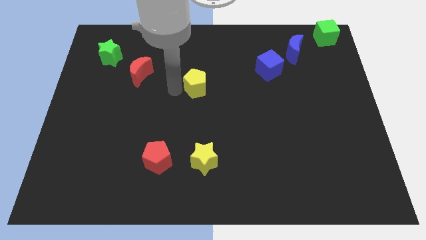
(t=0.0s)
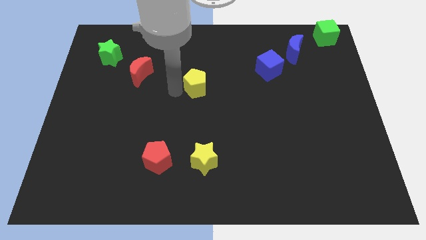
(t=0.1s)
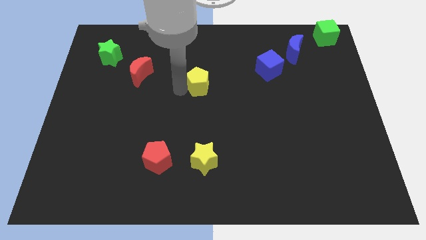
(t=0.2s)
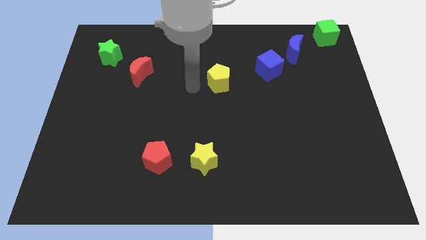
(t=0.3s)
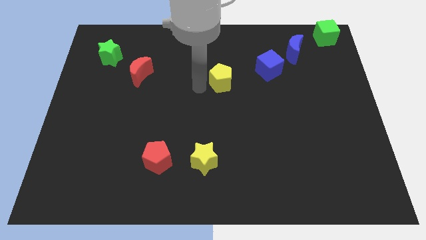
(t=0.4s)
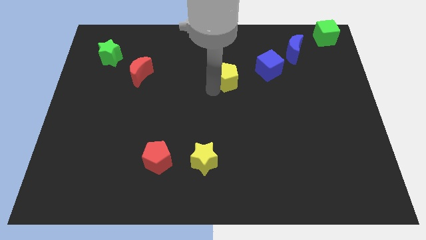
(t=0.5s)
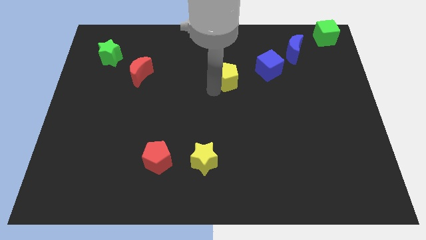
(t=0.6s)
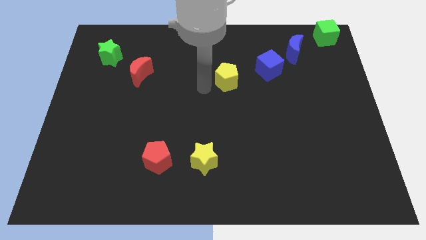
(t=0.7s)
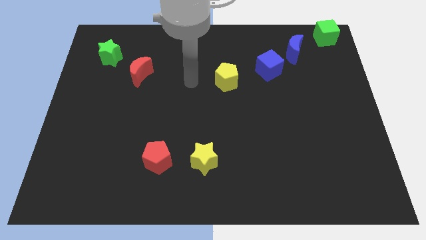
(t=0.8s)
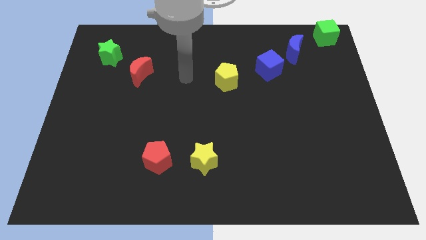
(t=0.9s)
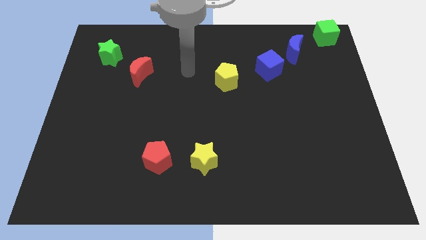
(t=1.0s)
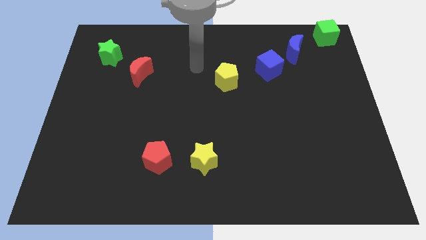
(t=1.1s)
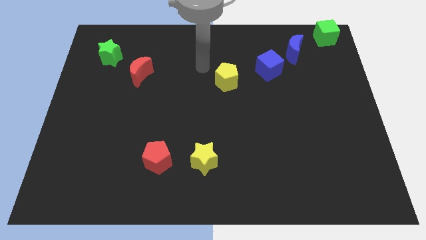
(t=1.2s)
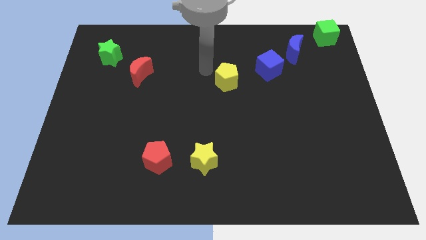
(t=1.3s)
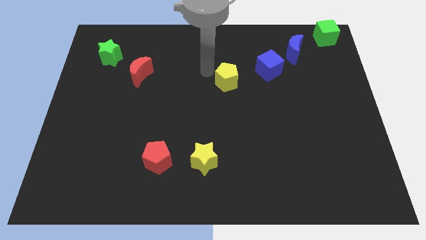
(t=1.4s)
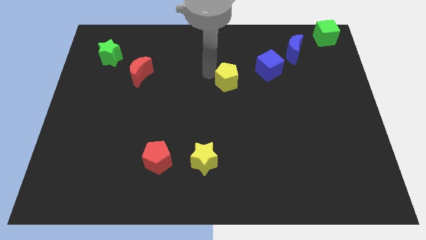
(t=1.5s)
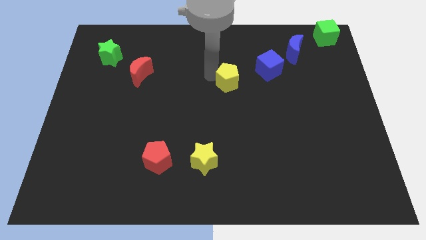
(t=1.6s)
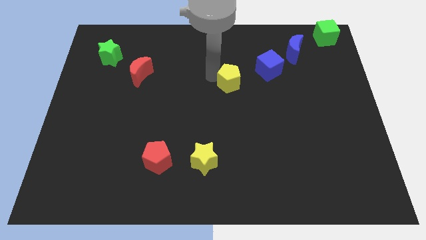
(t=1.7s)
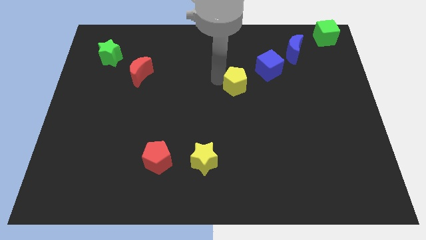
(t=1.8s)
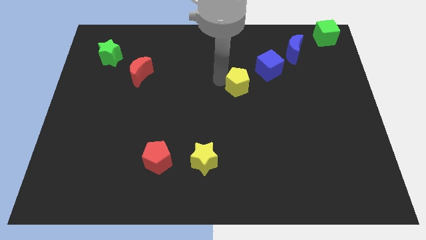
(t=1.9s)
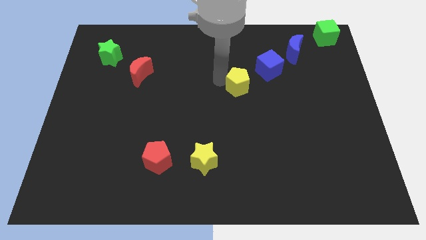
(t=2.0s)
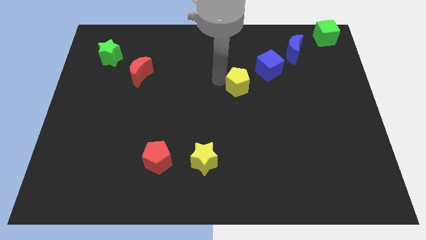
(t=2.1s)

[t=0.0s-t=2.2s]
slide the yellow pentagon towards the blue moon

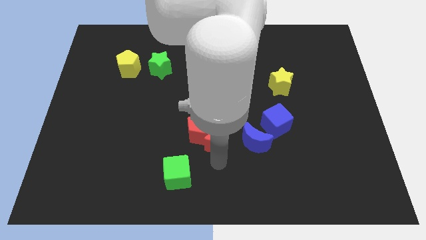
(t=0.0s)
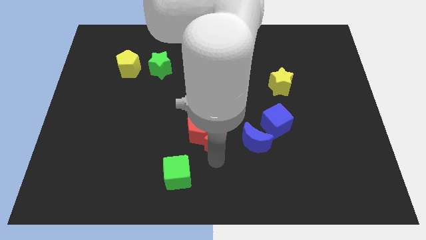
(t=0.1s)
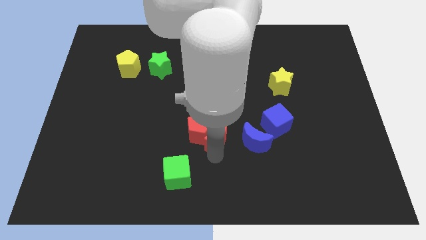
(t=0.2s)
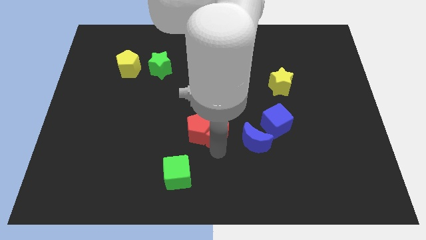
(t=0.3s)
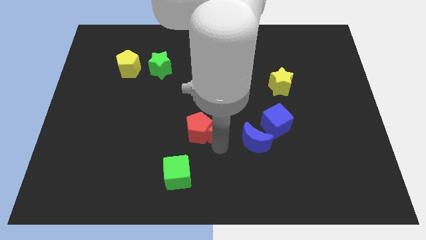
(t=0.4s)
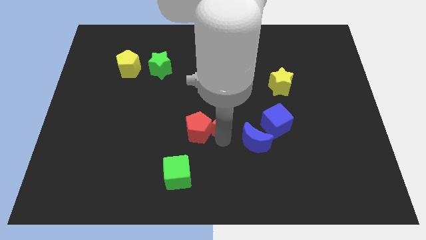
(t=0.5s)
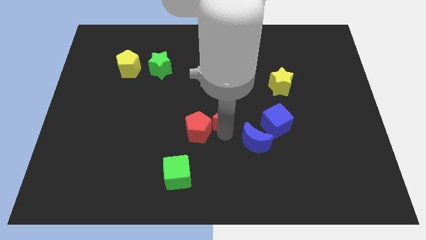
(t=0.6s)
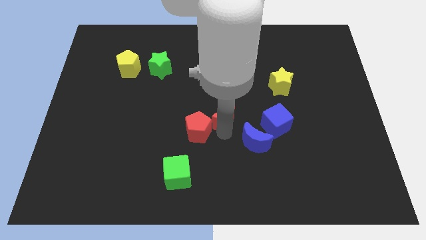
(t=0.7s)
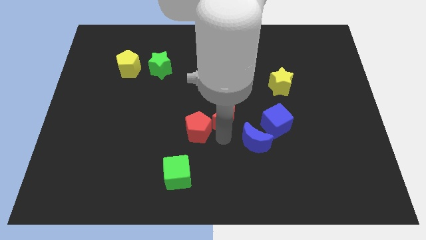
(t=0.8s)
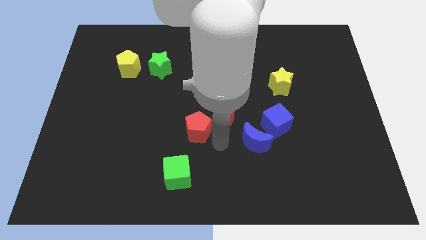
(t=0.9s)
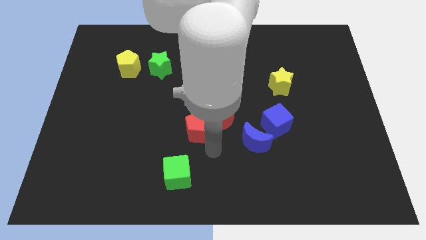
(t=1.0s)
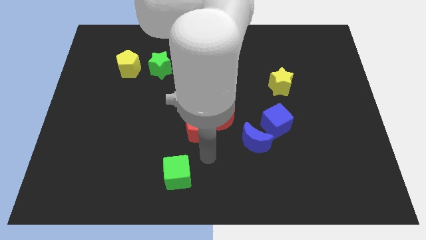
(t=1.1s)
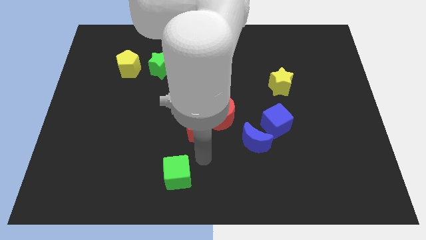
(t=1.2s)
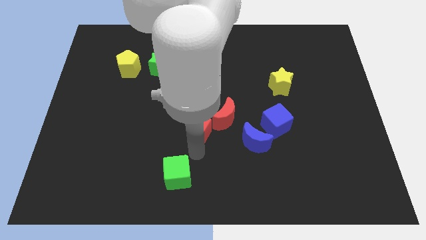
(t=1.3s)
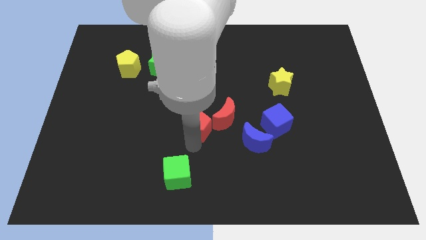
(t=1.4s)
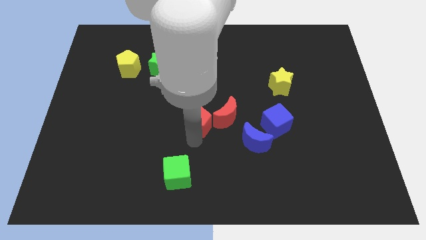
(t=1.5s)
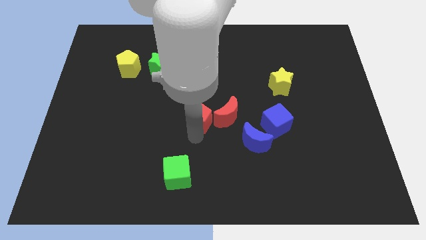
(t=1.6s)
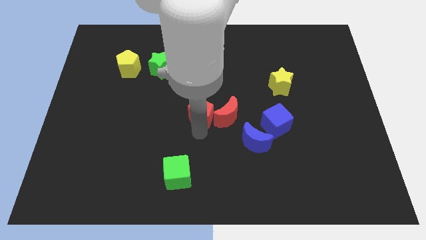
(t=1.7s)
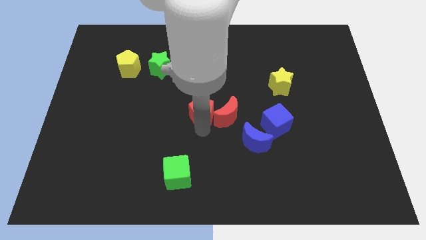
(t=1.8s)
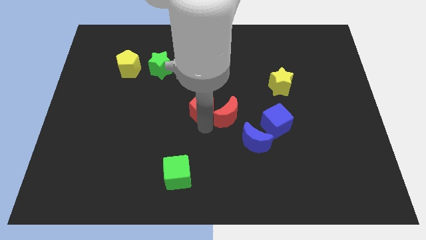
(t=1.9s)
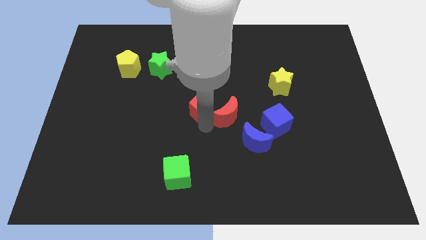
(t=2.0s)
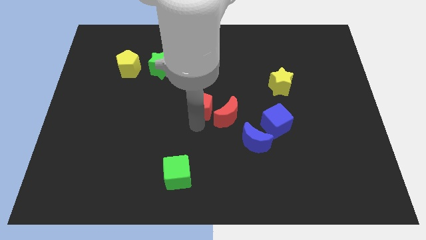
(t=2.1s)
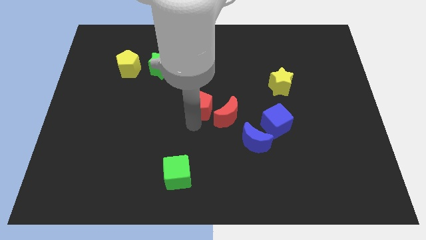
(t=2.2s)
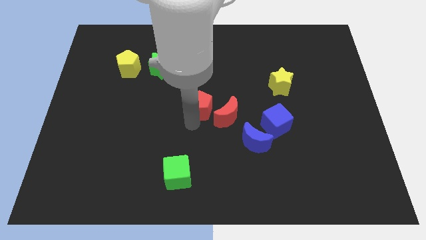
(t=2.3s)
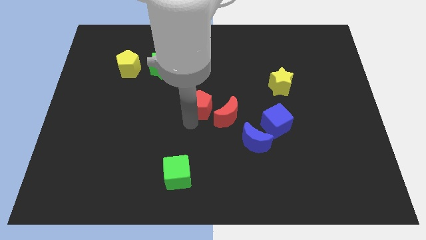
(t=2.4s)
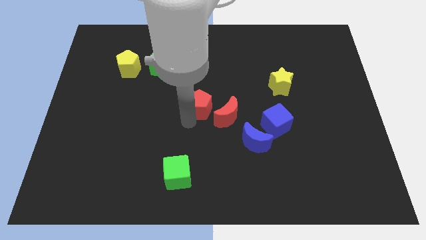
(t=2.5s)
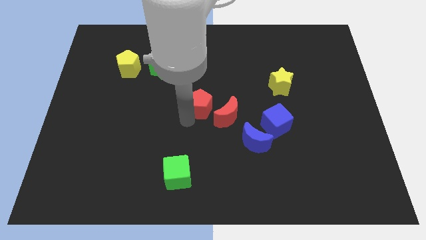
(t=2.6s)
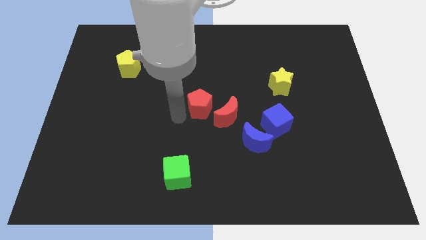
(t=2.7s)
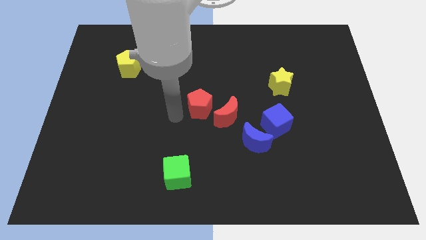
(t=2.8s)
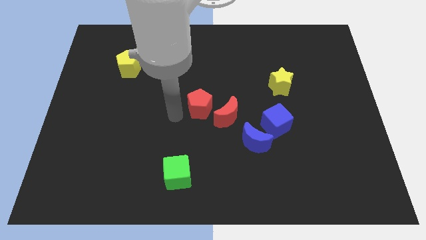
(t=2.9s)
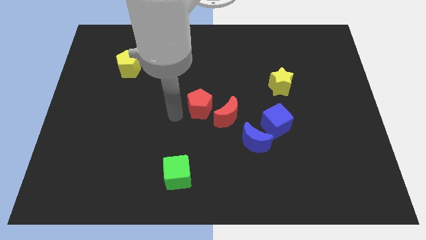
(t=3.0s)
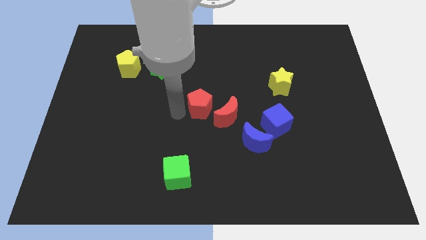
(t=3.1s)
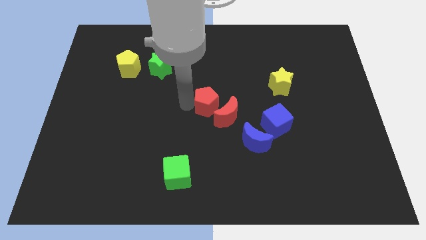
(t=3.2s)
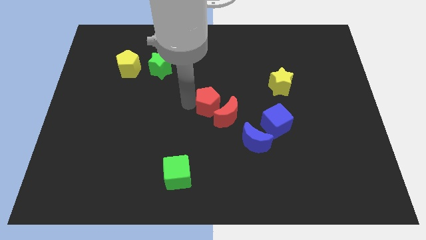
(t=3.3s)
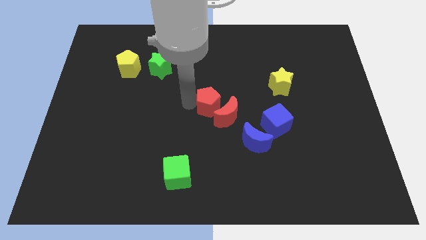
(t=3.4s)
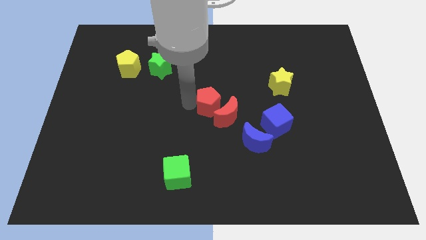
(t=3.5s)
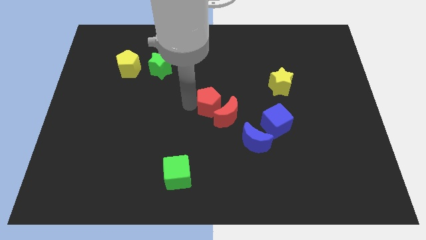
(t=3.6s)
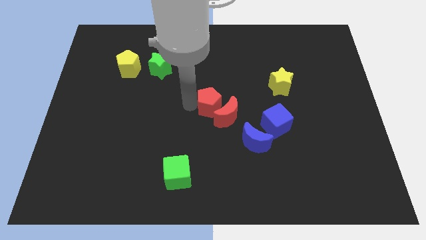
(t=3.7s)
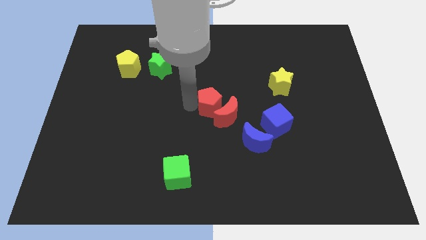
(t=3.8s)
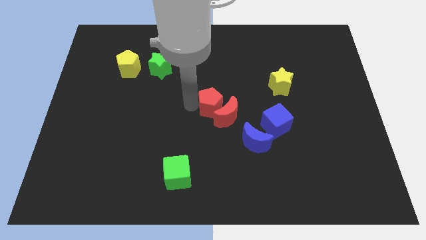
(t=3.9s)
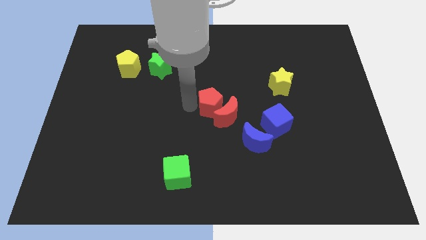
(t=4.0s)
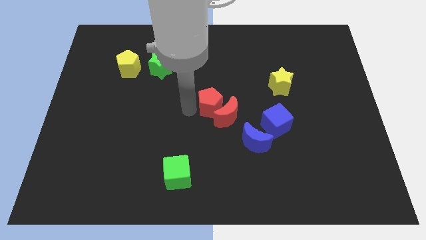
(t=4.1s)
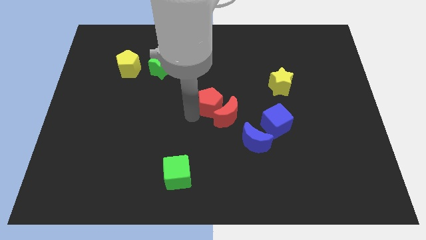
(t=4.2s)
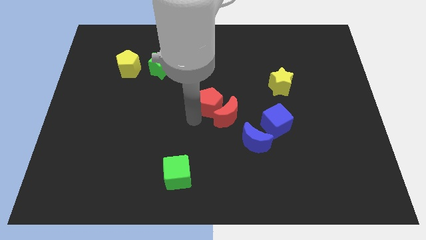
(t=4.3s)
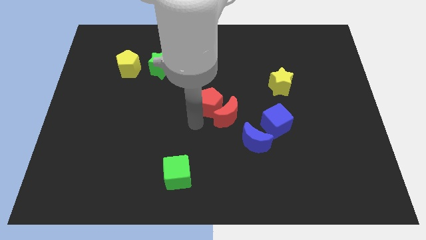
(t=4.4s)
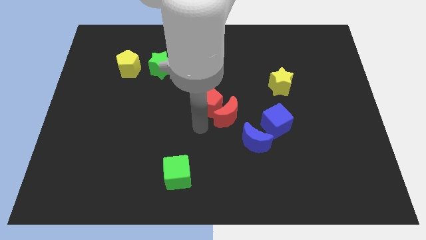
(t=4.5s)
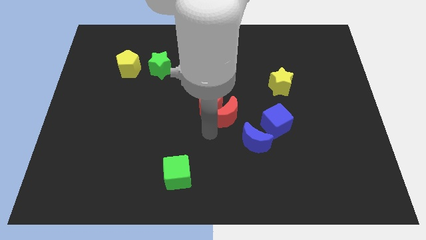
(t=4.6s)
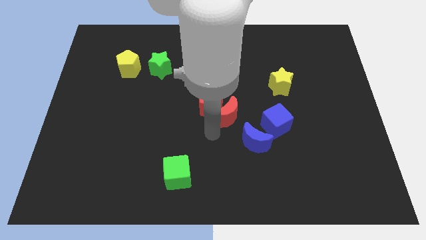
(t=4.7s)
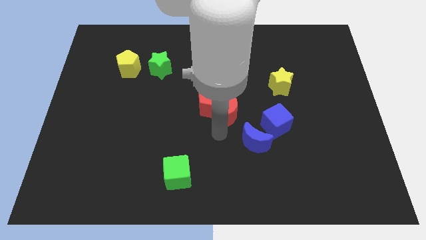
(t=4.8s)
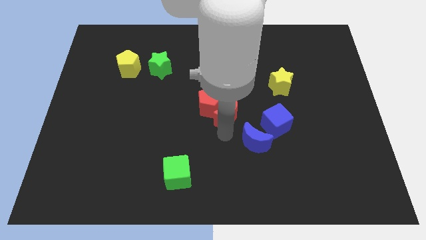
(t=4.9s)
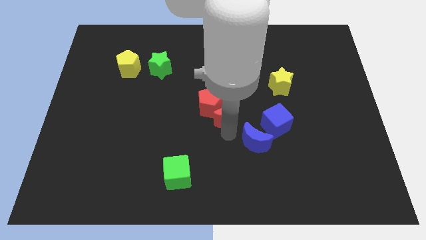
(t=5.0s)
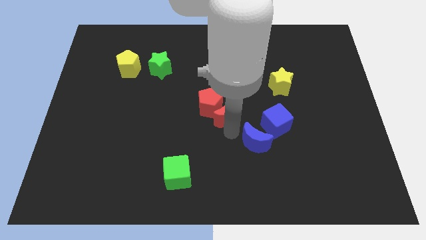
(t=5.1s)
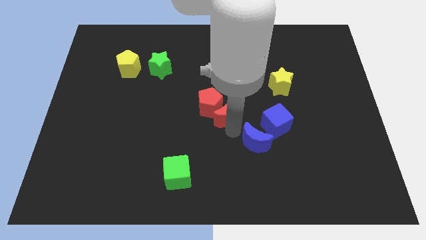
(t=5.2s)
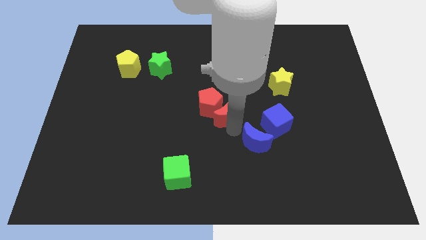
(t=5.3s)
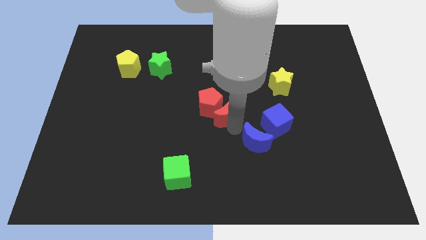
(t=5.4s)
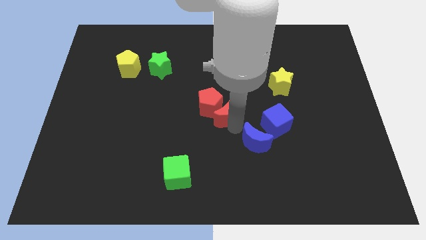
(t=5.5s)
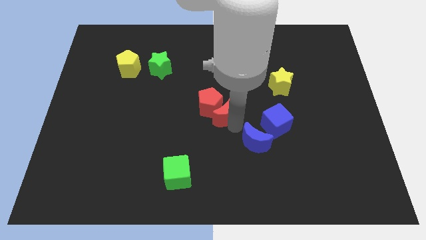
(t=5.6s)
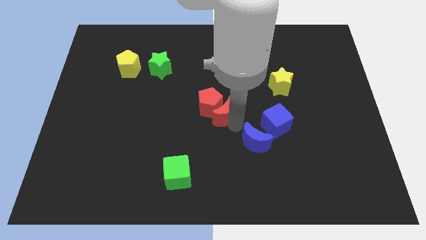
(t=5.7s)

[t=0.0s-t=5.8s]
move the red half moon and red pentagon to the center of the board

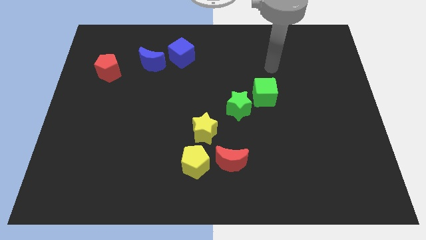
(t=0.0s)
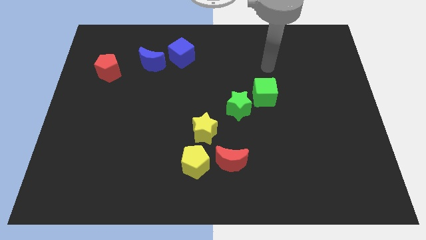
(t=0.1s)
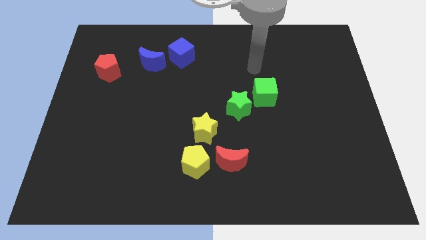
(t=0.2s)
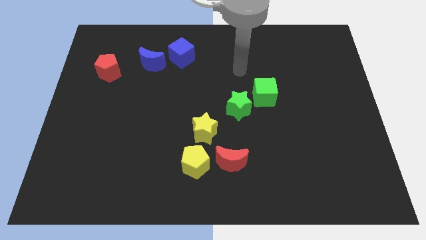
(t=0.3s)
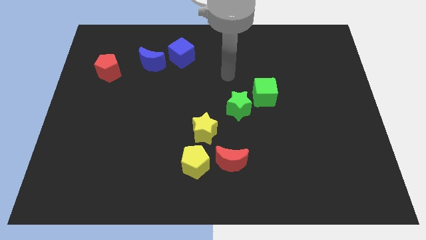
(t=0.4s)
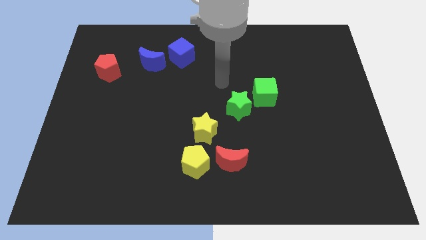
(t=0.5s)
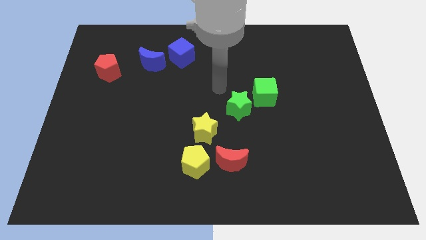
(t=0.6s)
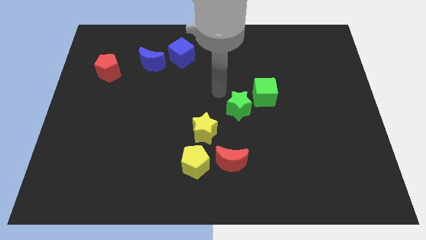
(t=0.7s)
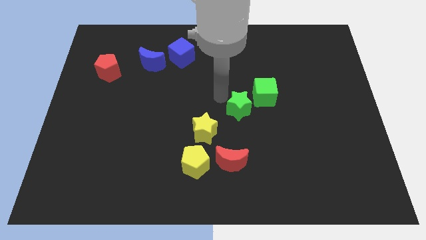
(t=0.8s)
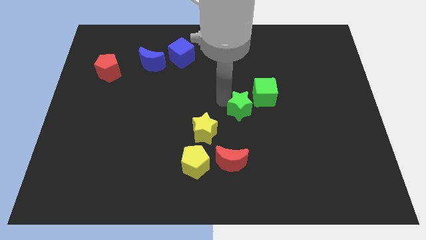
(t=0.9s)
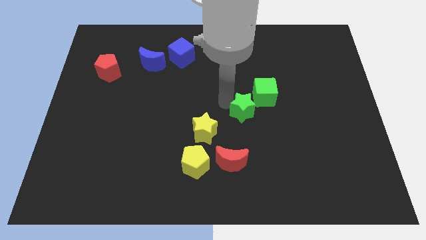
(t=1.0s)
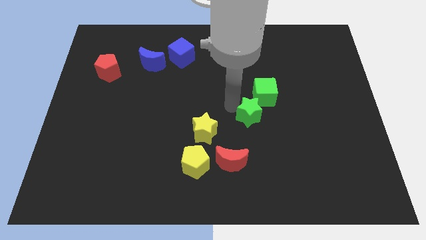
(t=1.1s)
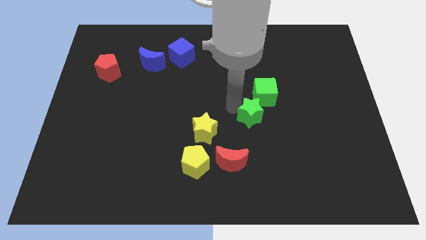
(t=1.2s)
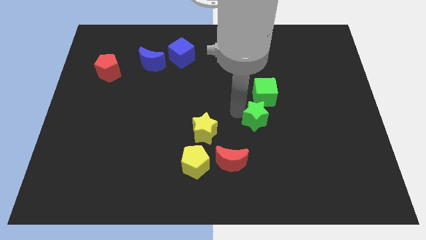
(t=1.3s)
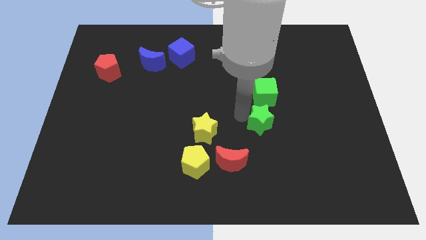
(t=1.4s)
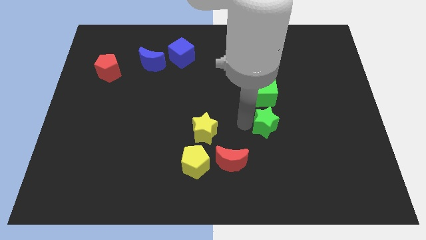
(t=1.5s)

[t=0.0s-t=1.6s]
place green star to the bottom of green cube
